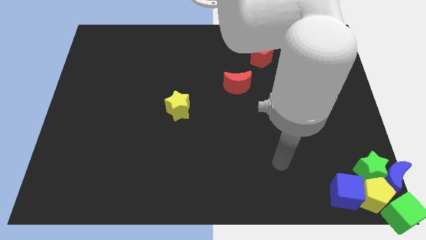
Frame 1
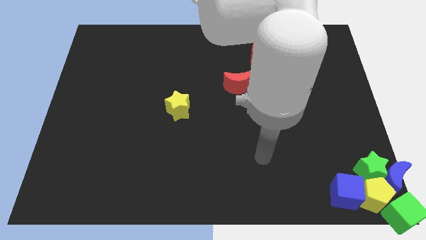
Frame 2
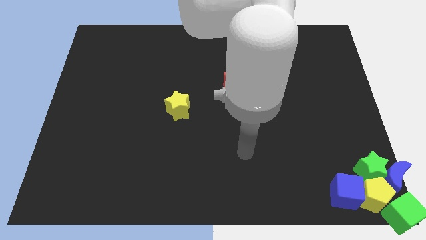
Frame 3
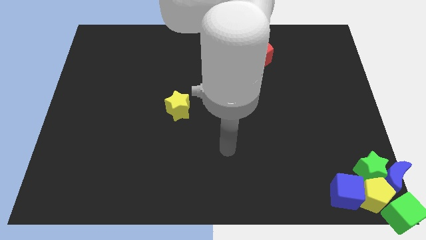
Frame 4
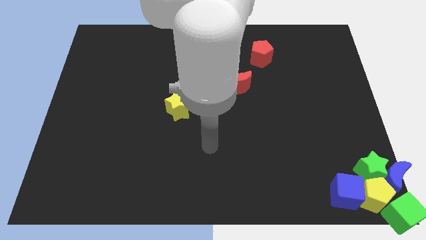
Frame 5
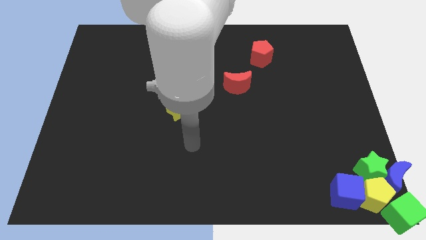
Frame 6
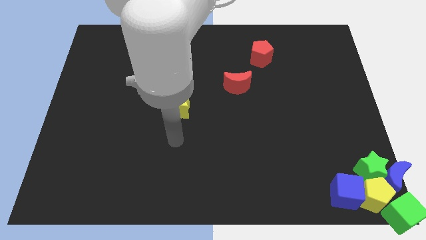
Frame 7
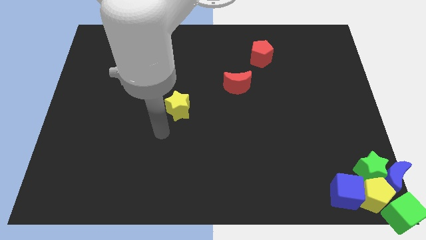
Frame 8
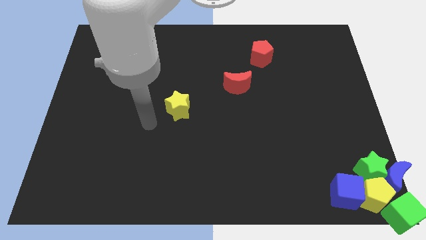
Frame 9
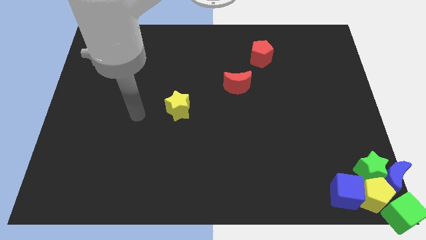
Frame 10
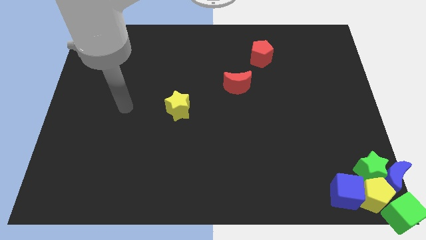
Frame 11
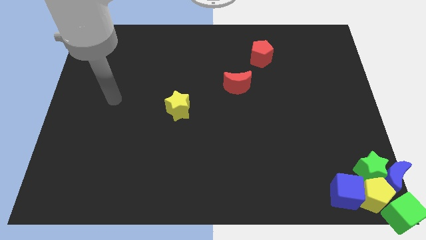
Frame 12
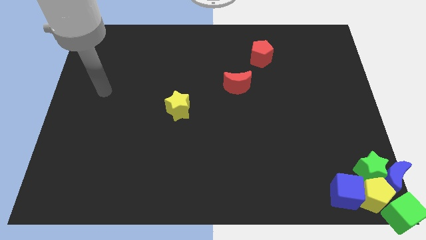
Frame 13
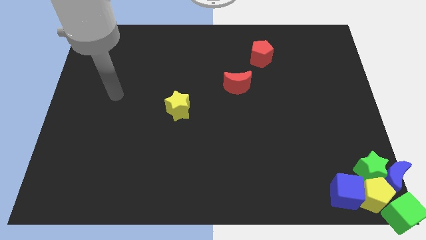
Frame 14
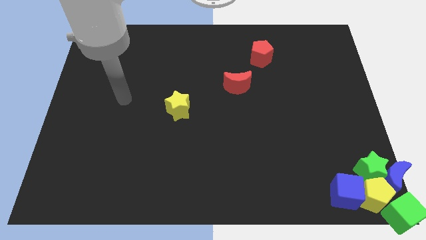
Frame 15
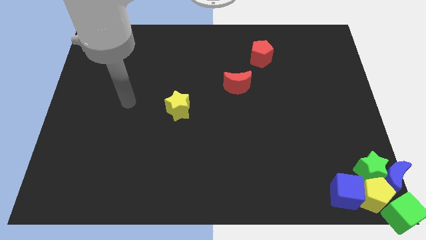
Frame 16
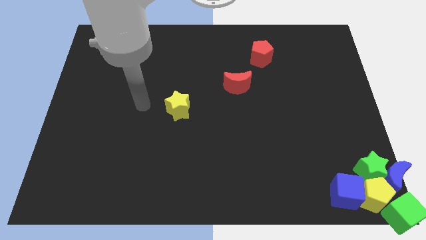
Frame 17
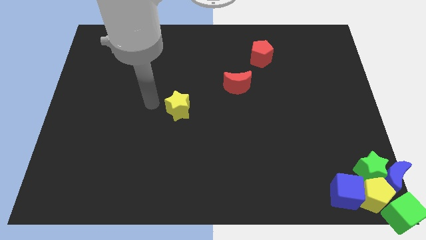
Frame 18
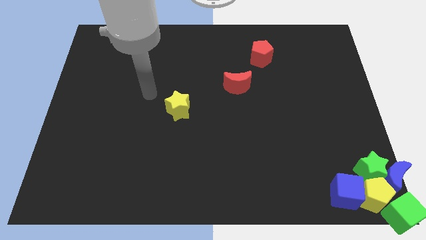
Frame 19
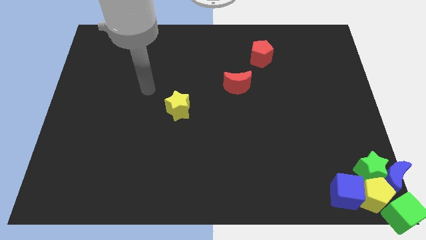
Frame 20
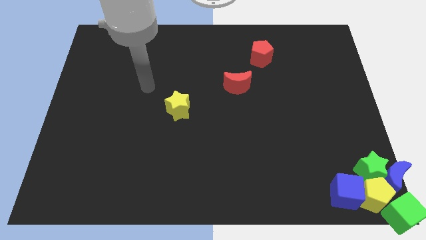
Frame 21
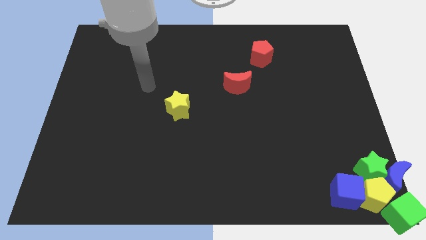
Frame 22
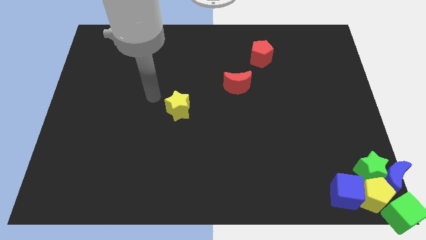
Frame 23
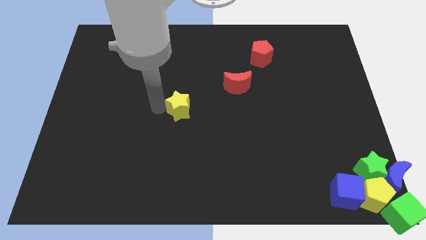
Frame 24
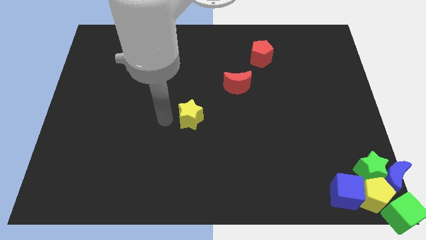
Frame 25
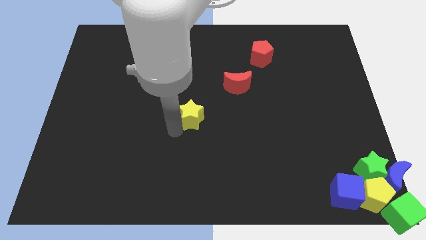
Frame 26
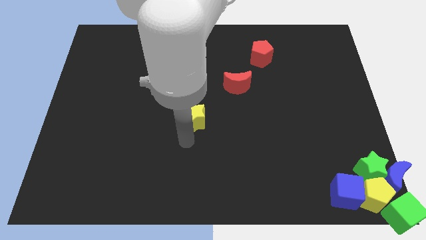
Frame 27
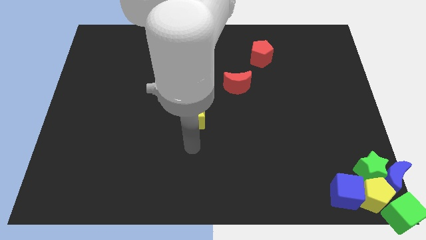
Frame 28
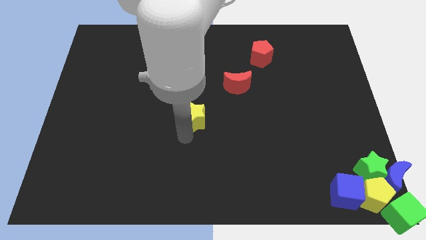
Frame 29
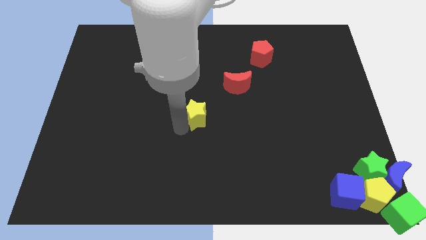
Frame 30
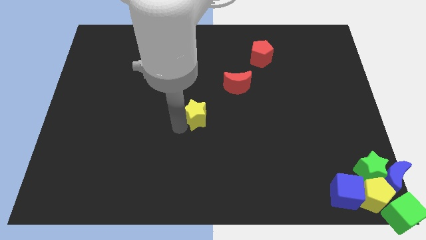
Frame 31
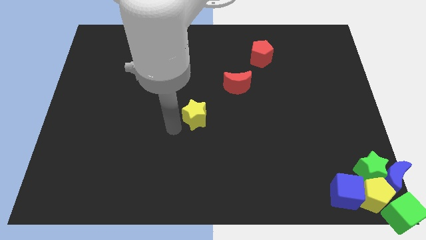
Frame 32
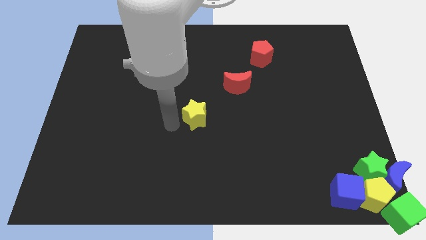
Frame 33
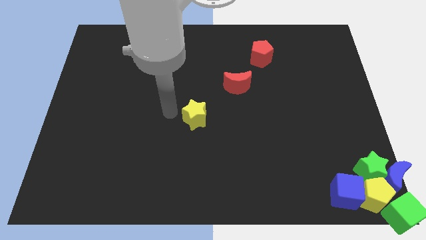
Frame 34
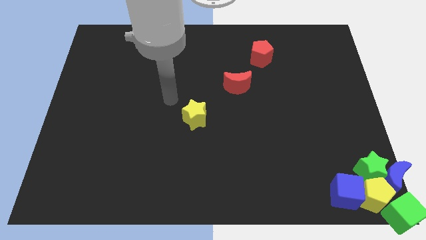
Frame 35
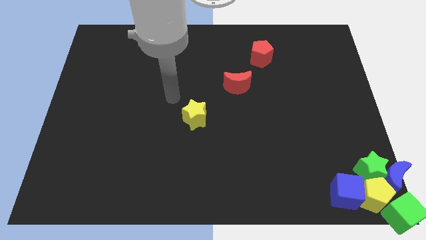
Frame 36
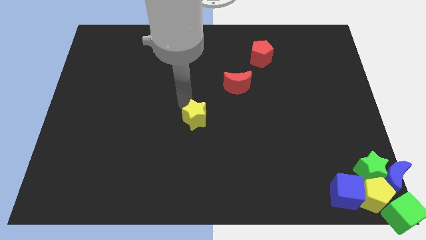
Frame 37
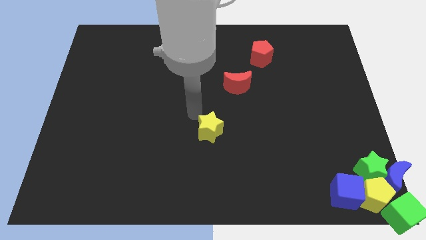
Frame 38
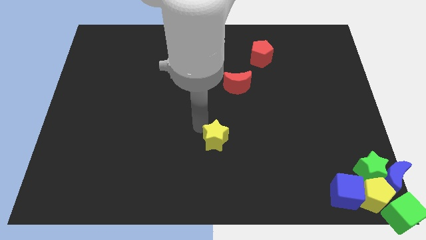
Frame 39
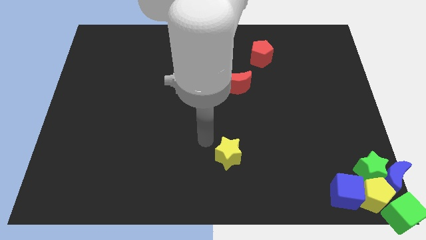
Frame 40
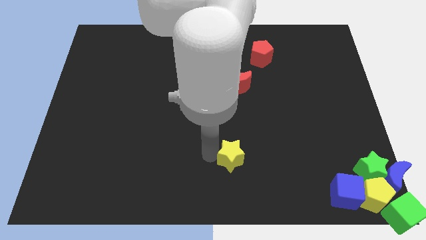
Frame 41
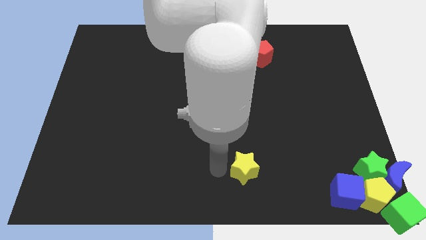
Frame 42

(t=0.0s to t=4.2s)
move the yellow star to the bottom of the board

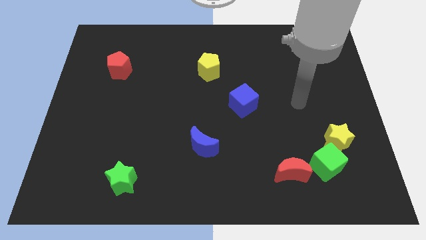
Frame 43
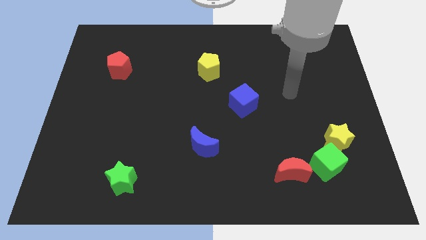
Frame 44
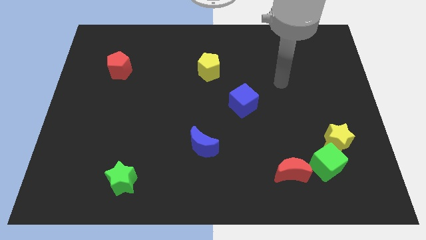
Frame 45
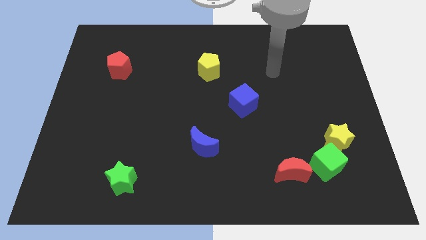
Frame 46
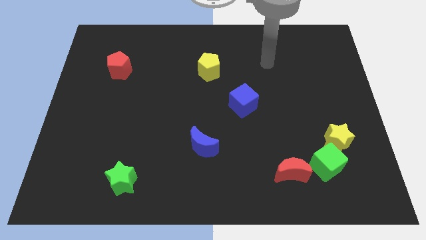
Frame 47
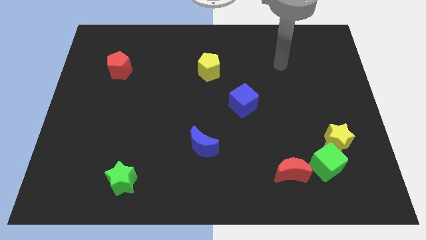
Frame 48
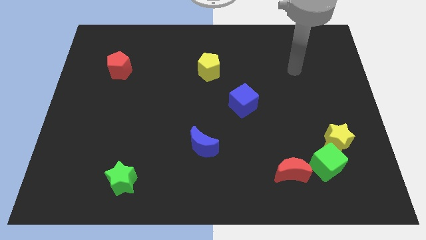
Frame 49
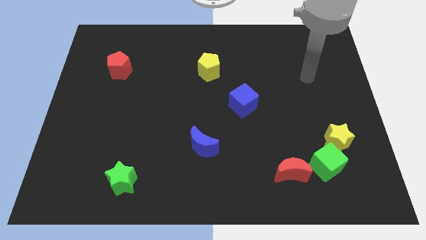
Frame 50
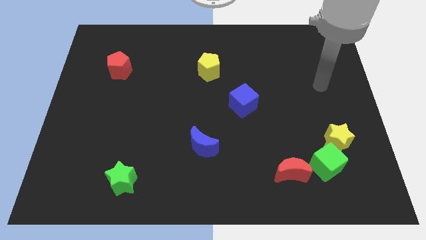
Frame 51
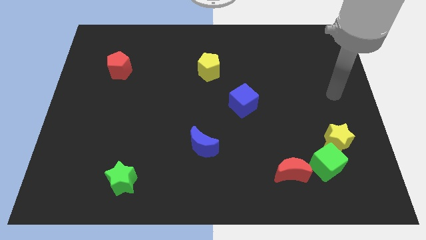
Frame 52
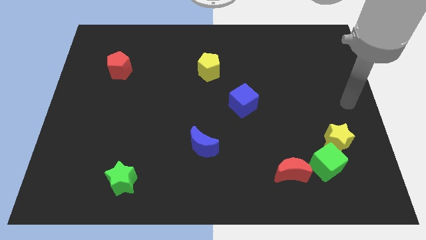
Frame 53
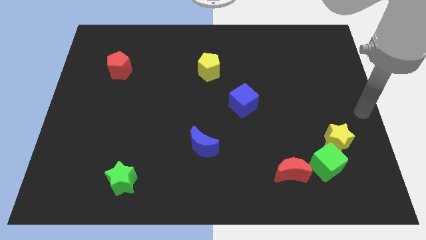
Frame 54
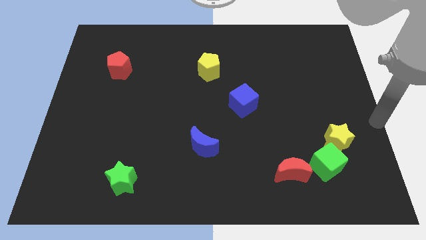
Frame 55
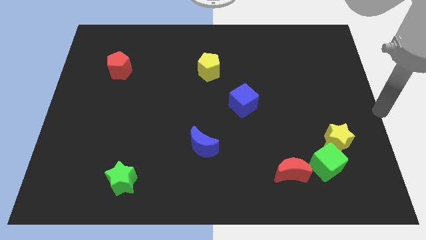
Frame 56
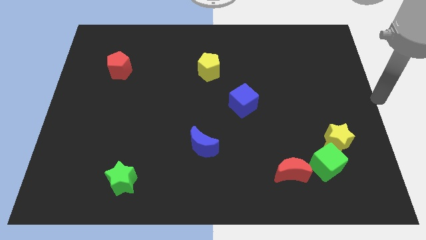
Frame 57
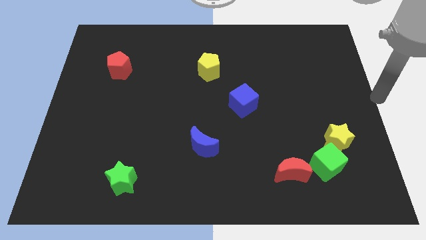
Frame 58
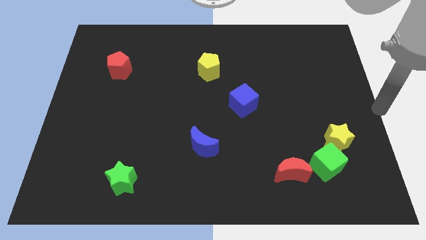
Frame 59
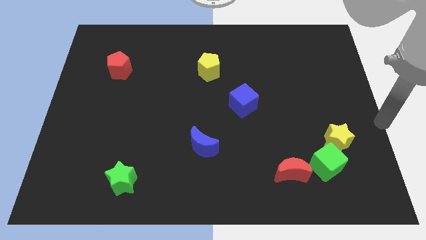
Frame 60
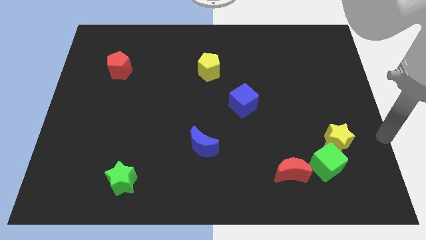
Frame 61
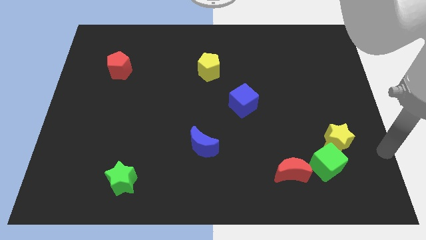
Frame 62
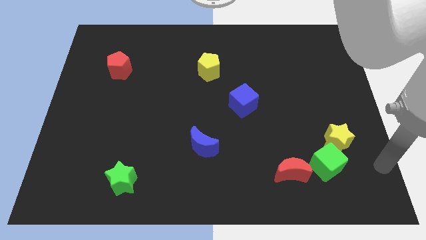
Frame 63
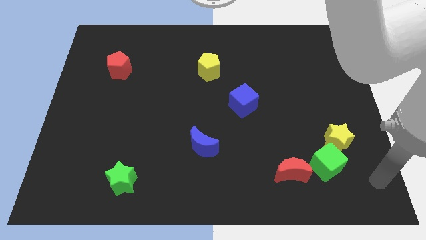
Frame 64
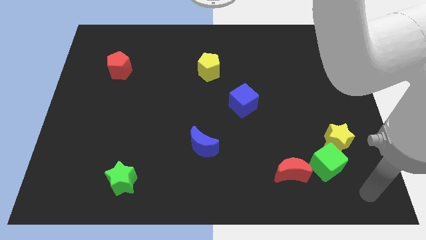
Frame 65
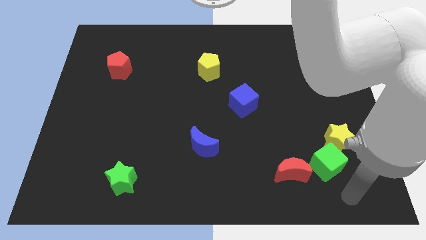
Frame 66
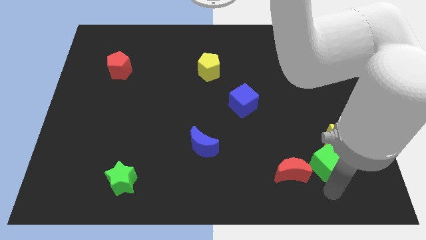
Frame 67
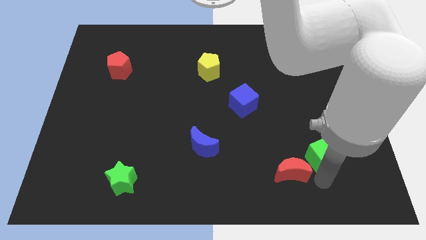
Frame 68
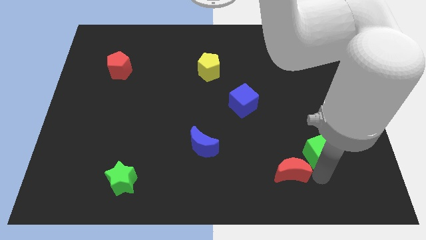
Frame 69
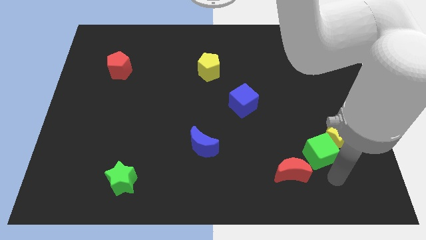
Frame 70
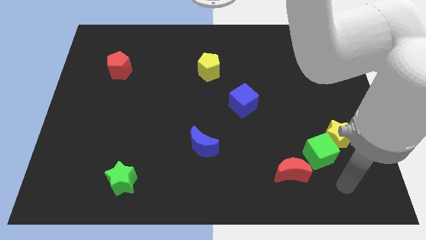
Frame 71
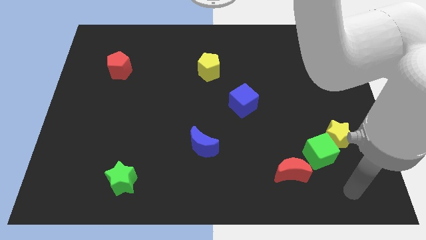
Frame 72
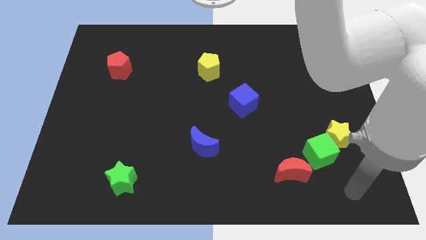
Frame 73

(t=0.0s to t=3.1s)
adjust the green cube in between the yellow star and red crescent

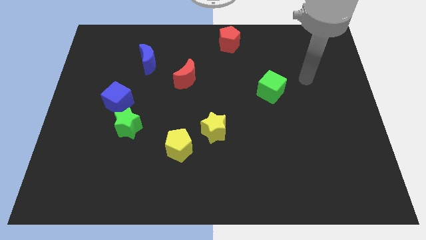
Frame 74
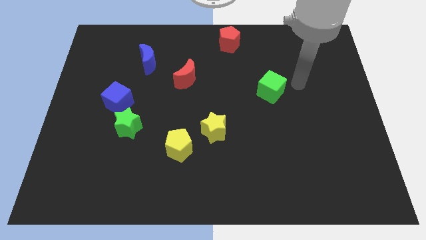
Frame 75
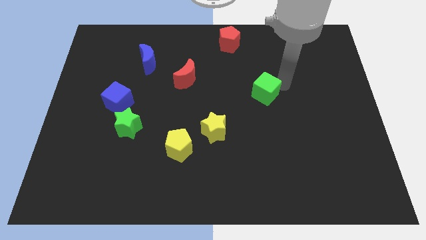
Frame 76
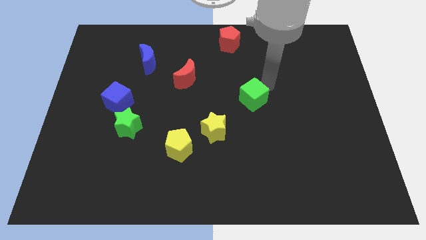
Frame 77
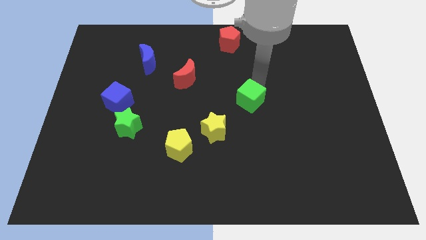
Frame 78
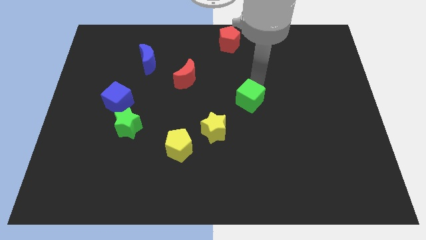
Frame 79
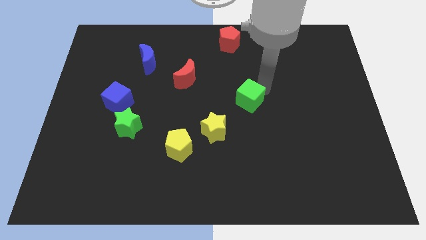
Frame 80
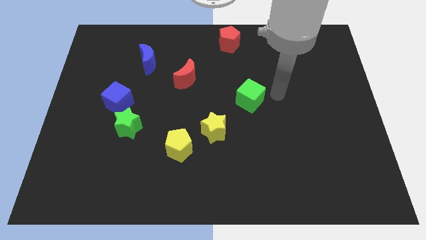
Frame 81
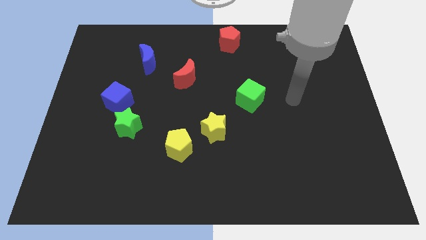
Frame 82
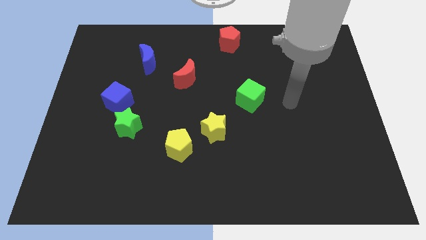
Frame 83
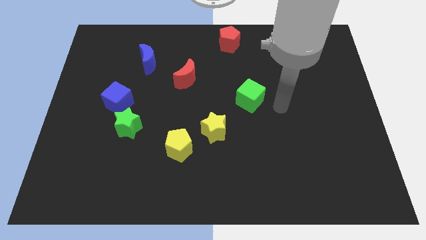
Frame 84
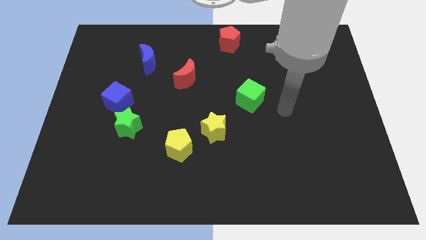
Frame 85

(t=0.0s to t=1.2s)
push the green cube slightly towards the yellow star

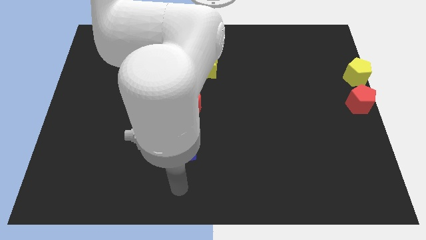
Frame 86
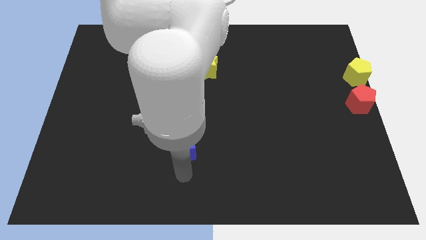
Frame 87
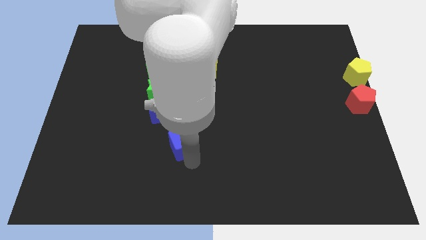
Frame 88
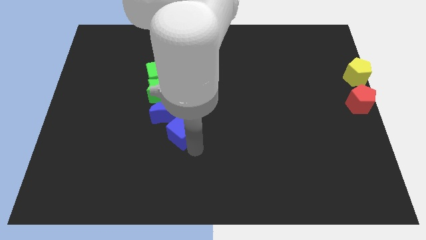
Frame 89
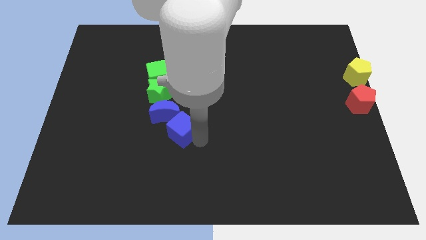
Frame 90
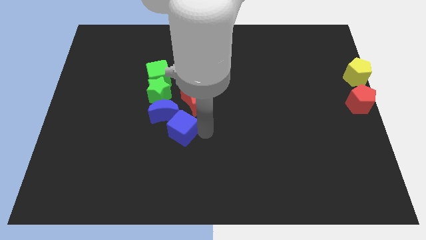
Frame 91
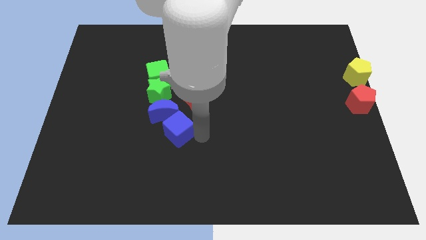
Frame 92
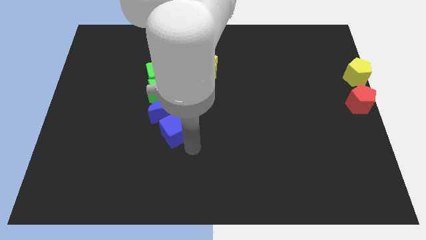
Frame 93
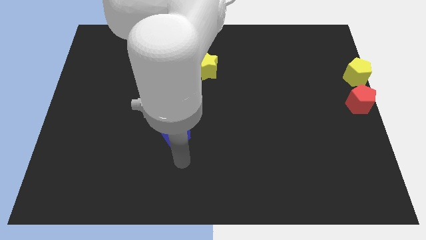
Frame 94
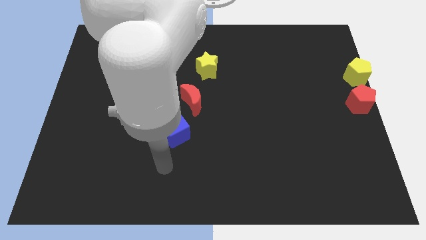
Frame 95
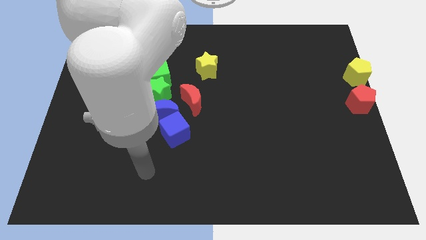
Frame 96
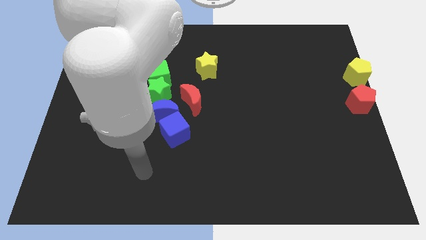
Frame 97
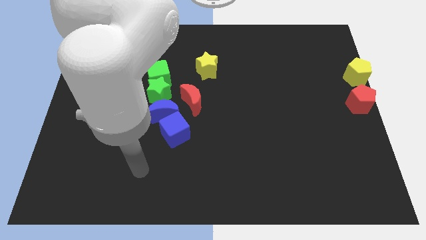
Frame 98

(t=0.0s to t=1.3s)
move the blue cube into the blue crescent
